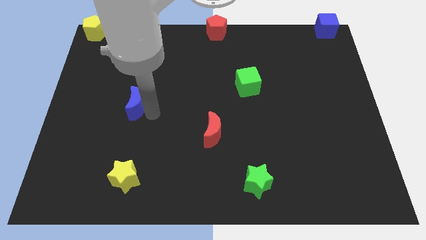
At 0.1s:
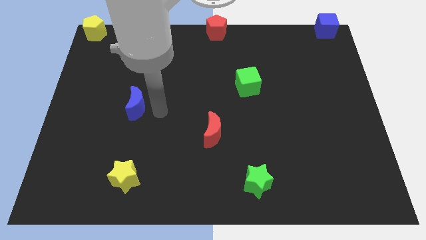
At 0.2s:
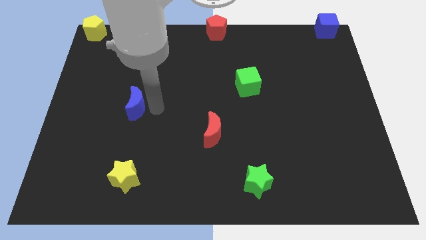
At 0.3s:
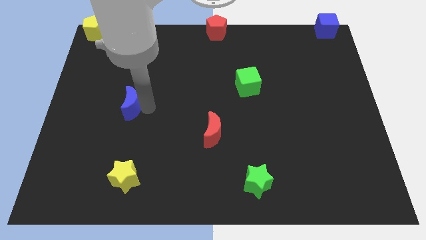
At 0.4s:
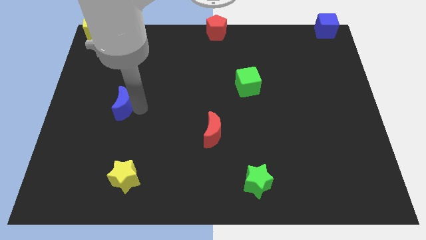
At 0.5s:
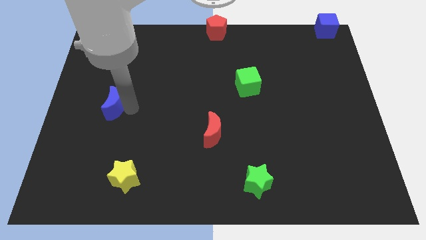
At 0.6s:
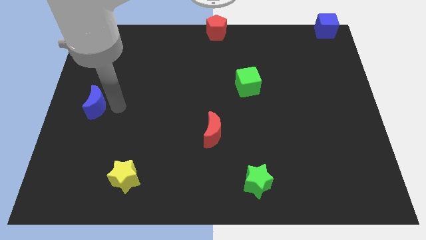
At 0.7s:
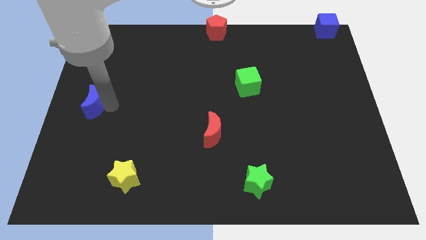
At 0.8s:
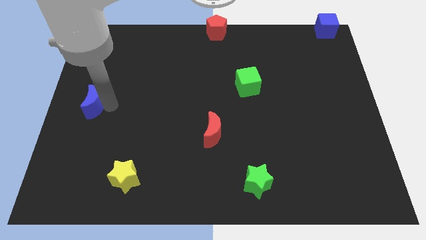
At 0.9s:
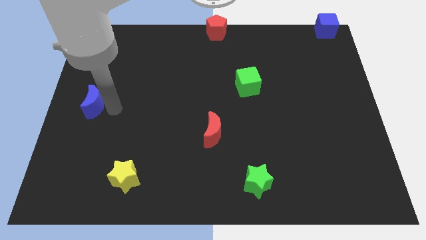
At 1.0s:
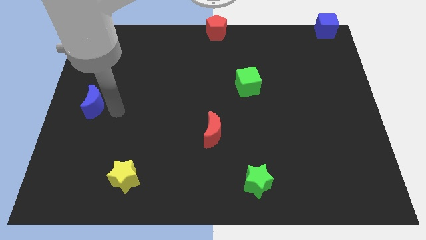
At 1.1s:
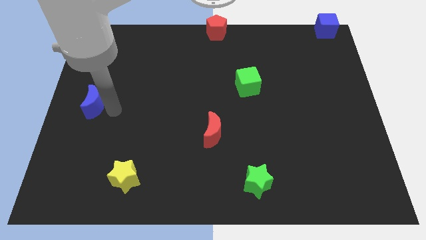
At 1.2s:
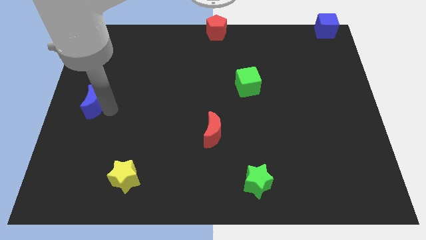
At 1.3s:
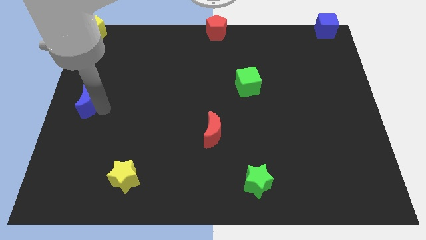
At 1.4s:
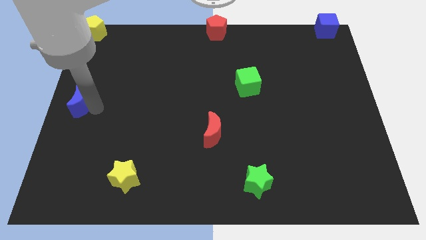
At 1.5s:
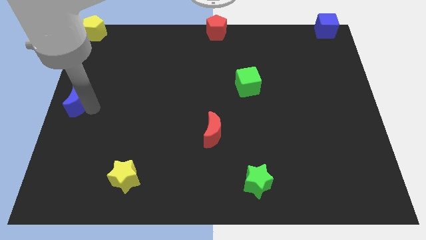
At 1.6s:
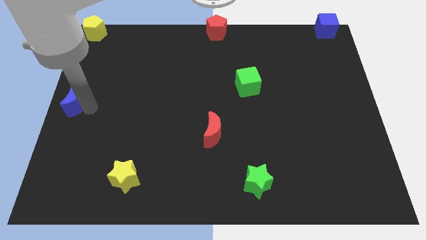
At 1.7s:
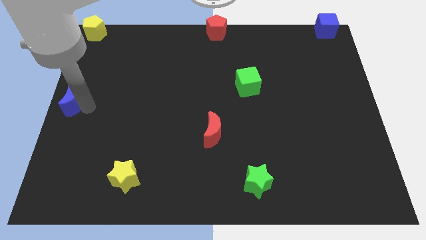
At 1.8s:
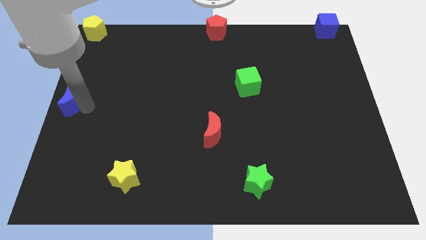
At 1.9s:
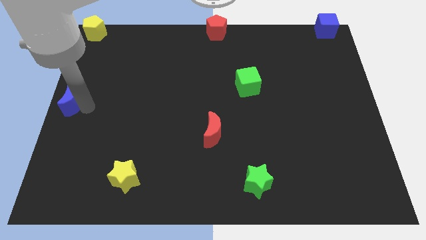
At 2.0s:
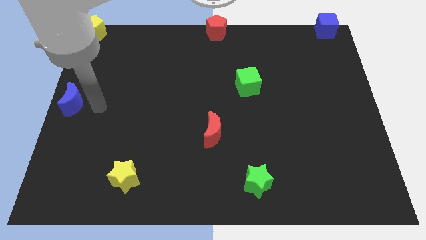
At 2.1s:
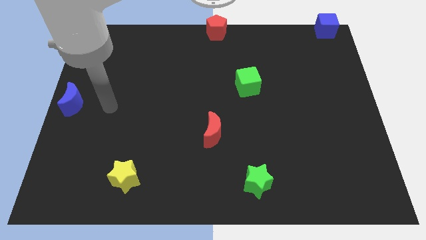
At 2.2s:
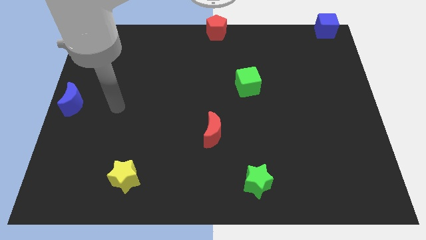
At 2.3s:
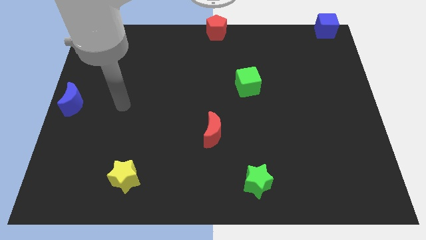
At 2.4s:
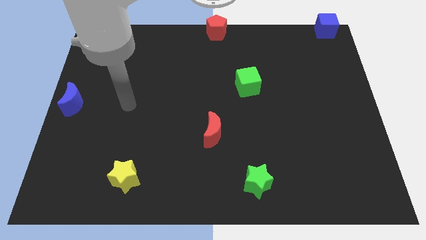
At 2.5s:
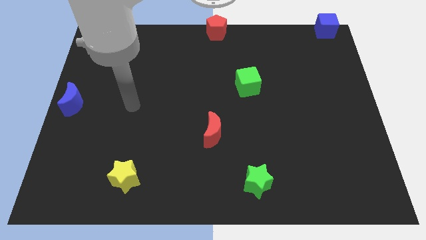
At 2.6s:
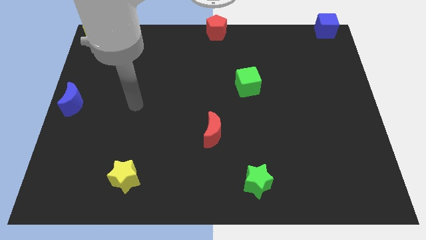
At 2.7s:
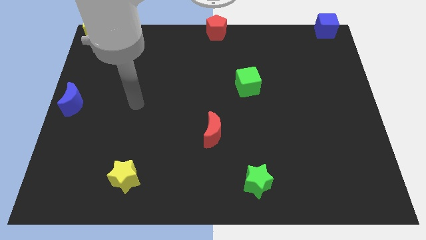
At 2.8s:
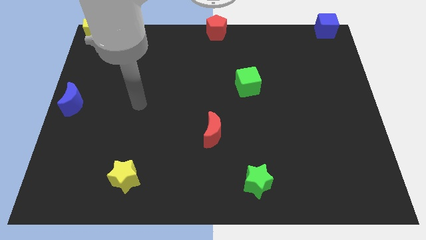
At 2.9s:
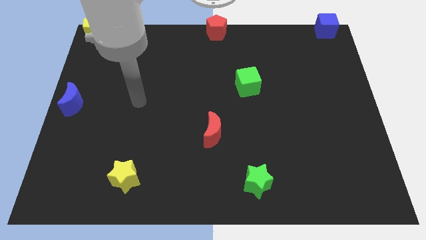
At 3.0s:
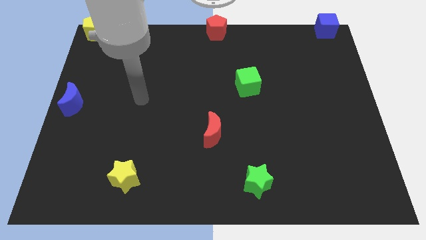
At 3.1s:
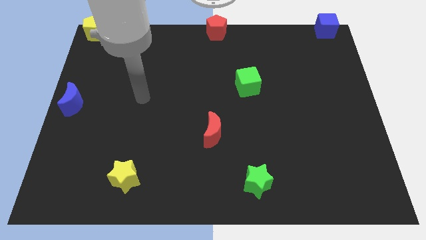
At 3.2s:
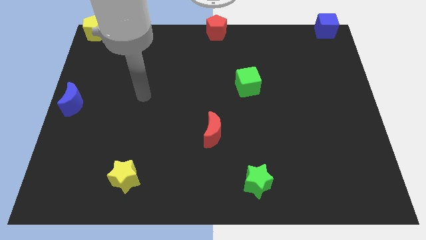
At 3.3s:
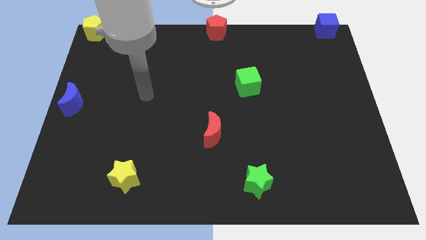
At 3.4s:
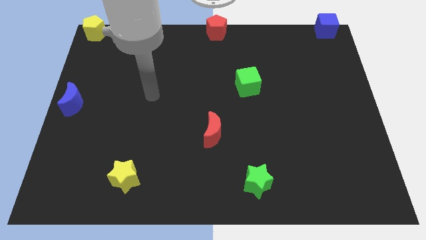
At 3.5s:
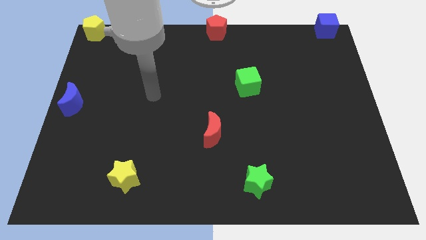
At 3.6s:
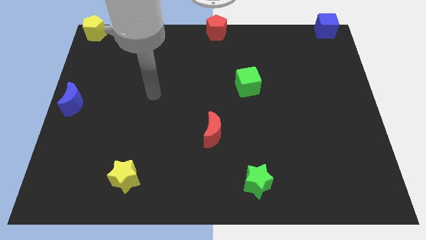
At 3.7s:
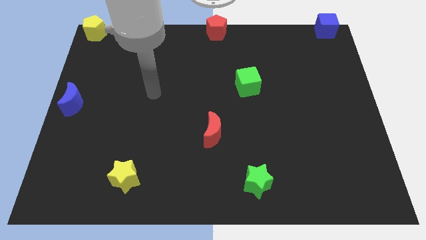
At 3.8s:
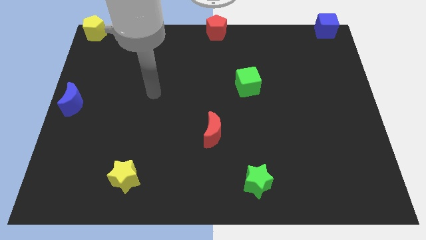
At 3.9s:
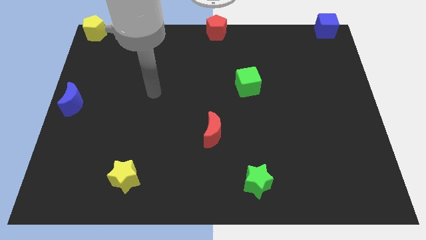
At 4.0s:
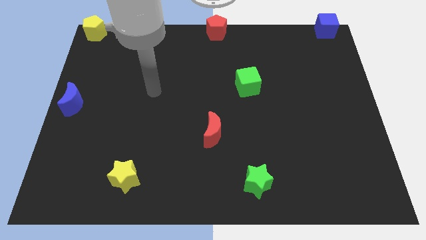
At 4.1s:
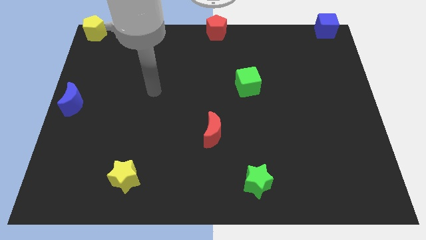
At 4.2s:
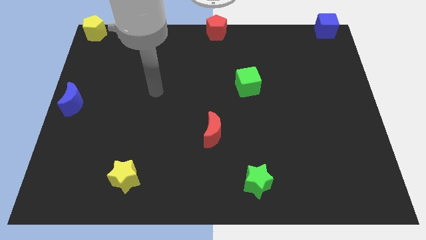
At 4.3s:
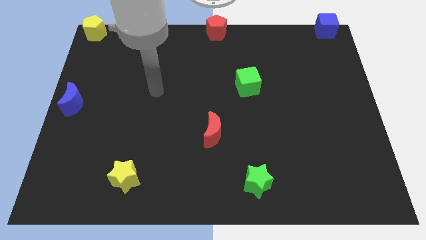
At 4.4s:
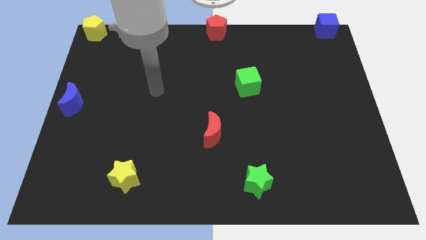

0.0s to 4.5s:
move the blue crescent at the center left of the board

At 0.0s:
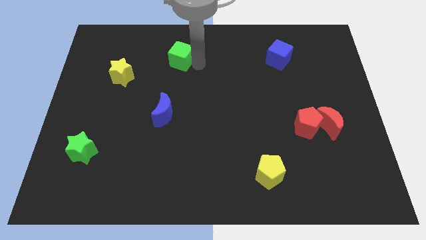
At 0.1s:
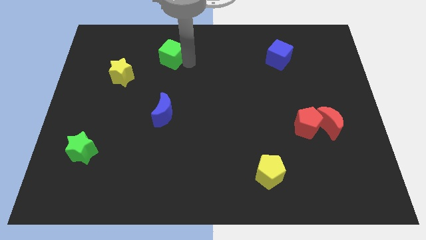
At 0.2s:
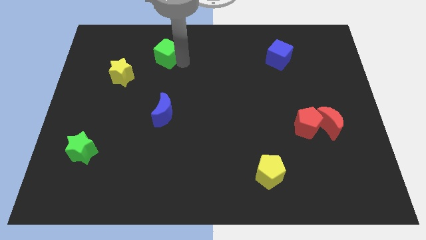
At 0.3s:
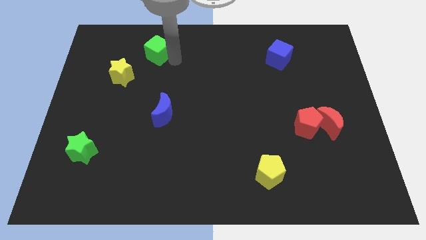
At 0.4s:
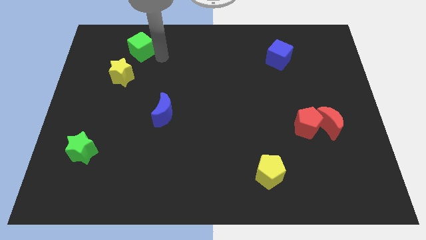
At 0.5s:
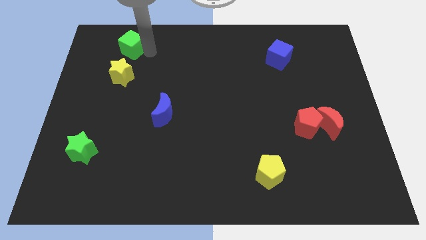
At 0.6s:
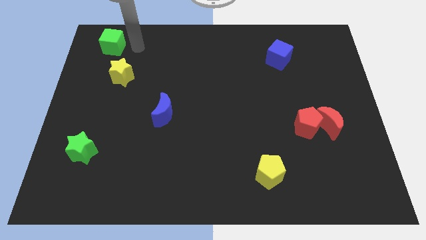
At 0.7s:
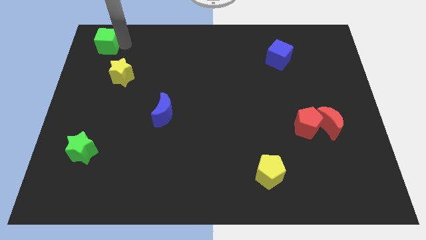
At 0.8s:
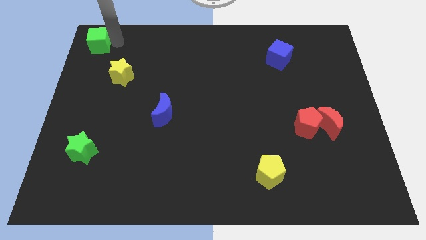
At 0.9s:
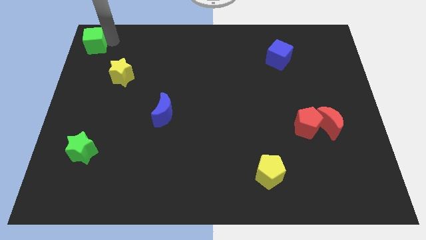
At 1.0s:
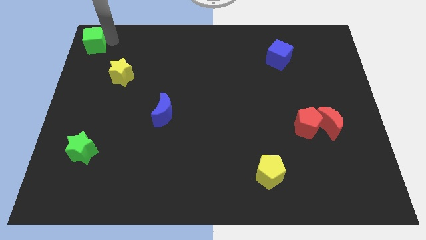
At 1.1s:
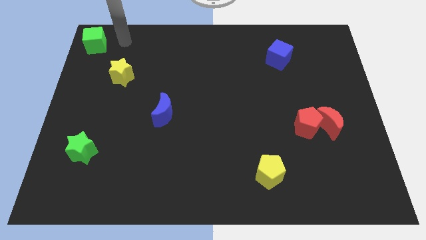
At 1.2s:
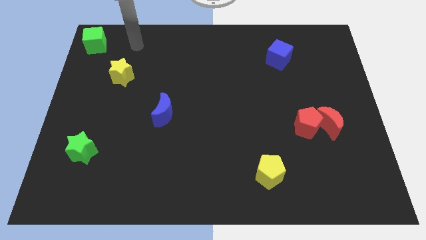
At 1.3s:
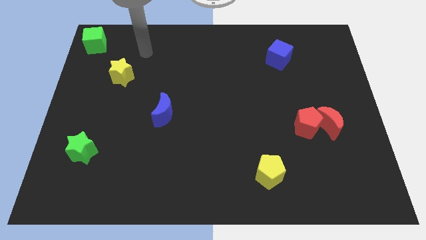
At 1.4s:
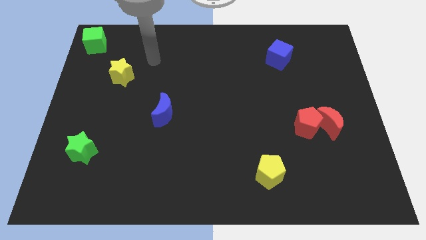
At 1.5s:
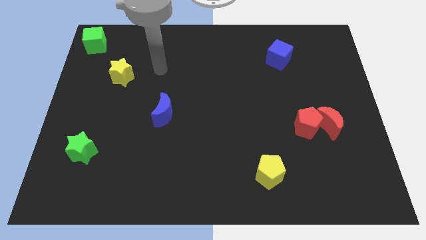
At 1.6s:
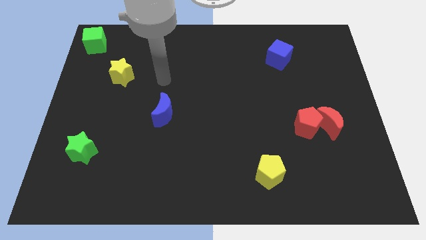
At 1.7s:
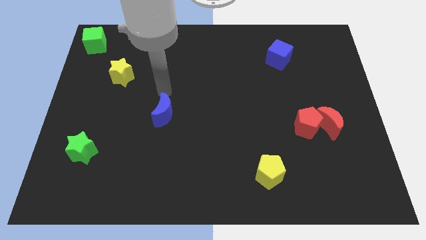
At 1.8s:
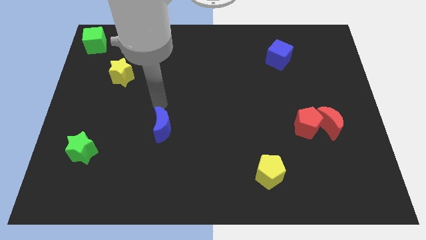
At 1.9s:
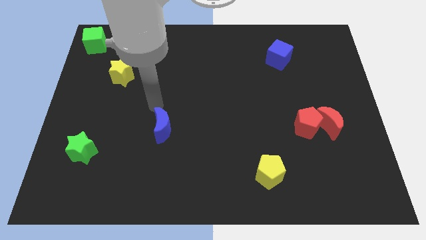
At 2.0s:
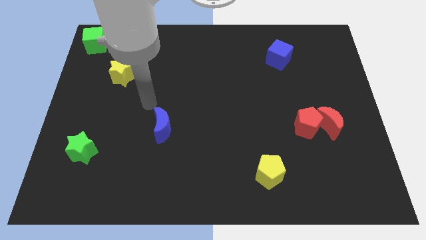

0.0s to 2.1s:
place the green cube at the top left

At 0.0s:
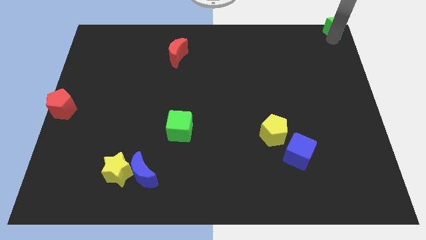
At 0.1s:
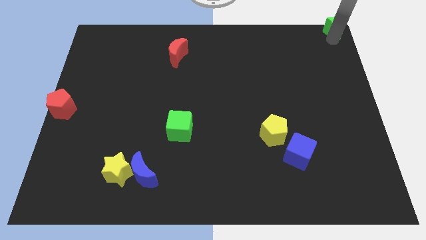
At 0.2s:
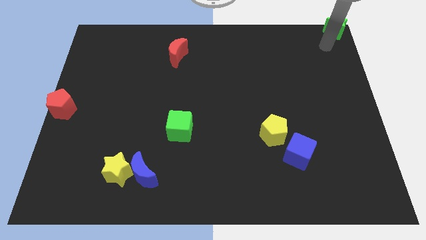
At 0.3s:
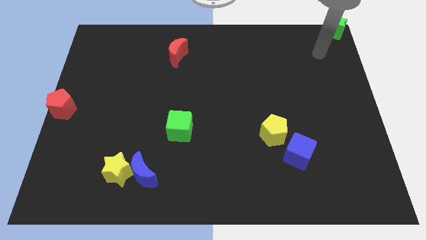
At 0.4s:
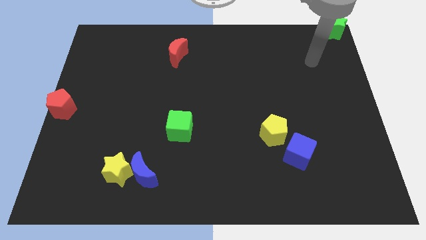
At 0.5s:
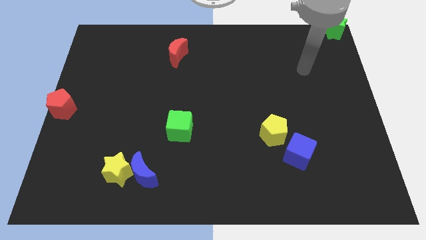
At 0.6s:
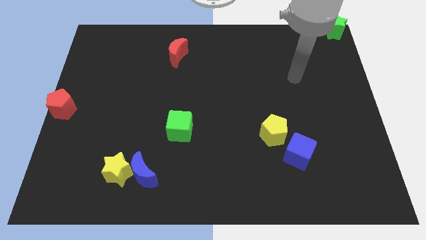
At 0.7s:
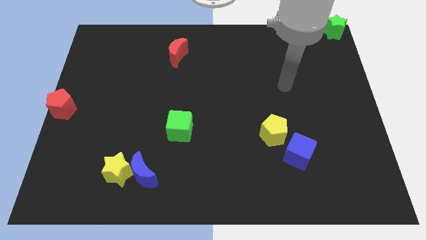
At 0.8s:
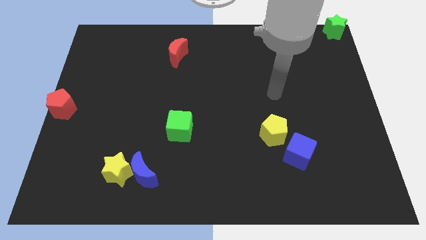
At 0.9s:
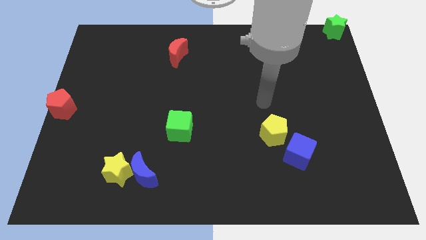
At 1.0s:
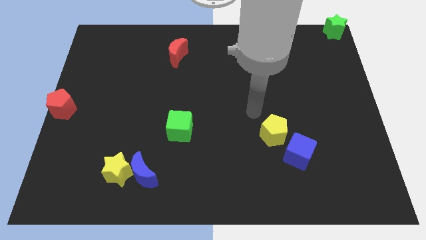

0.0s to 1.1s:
move the arm away from the green star

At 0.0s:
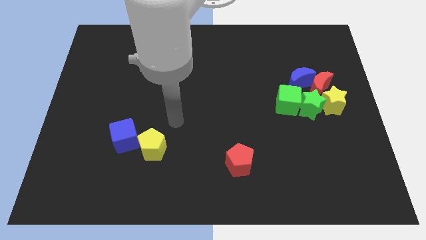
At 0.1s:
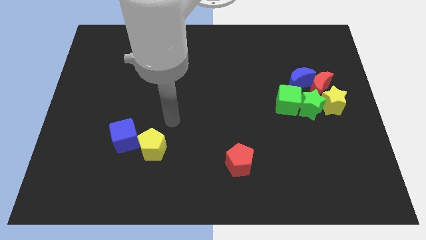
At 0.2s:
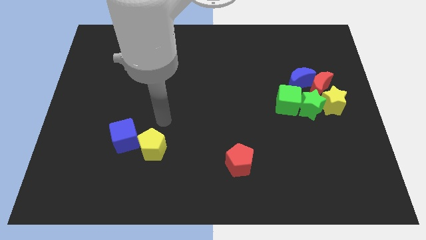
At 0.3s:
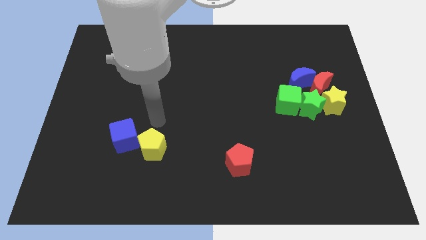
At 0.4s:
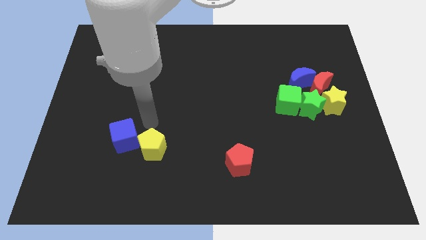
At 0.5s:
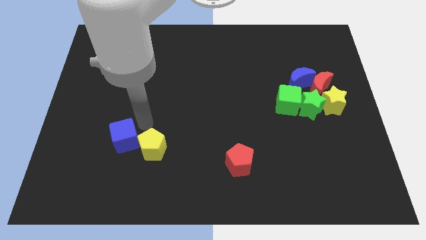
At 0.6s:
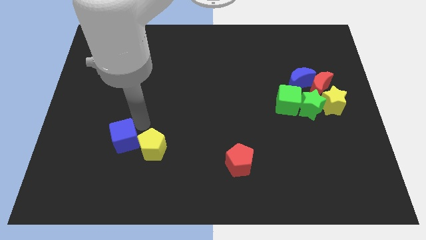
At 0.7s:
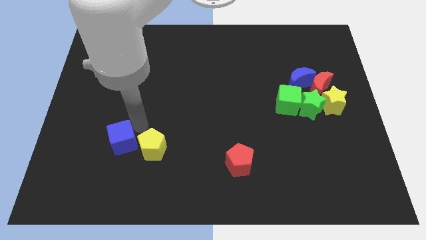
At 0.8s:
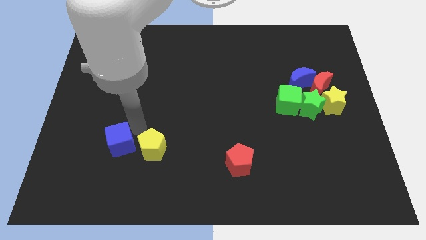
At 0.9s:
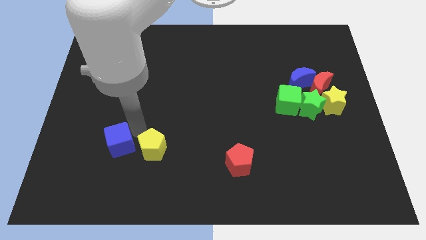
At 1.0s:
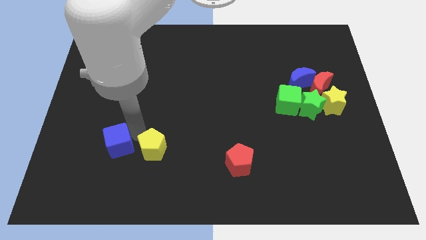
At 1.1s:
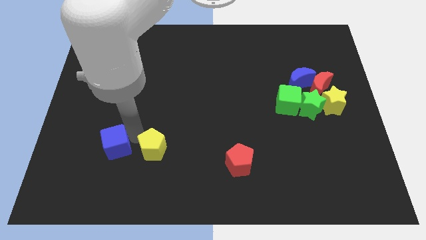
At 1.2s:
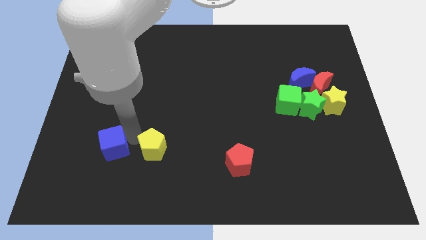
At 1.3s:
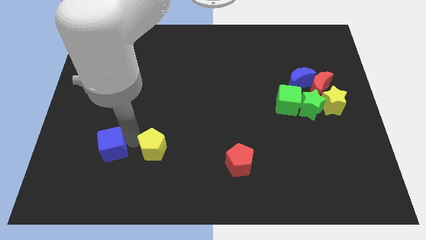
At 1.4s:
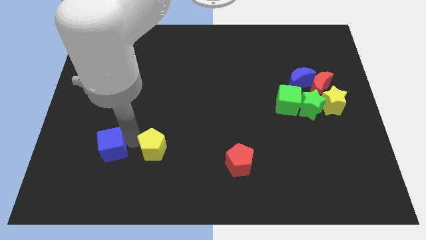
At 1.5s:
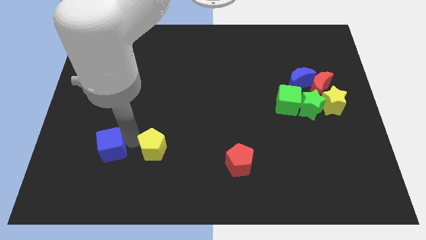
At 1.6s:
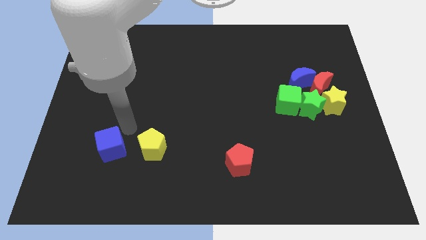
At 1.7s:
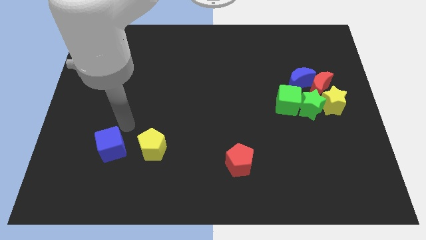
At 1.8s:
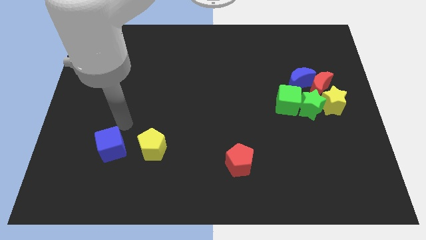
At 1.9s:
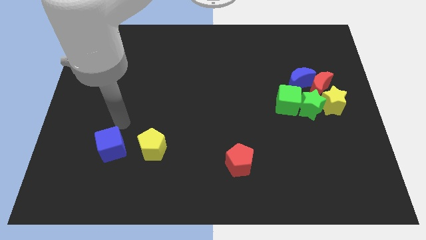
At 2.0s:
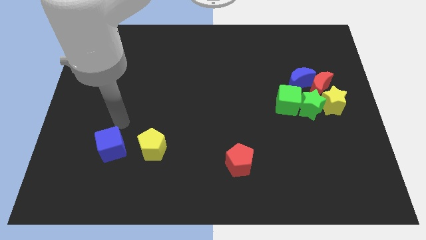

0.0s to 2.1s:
place blue cube parallel to yellow pentagon
